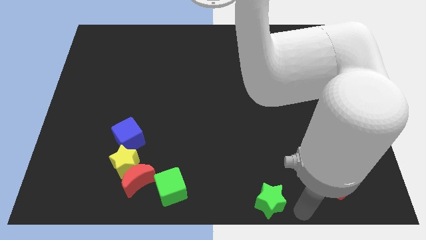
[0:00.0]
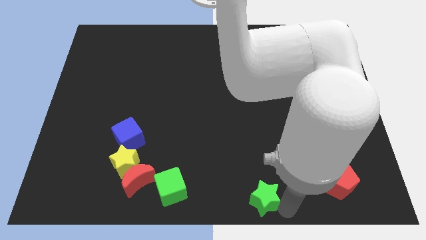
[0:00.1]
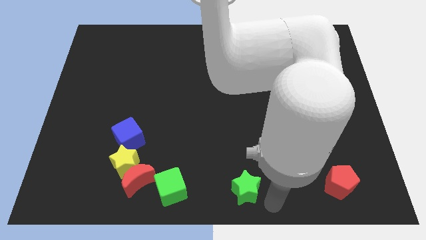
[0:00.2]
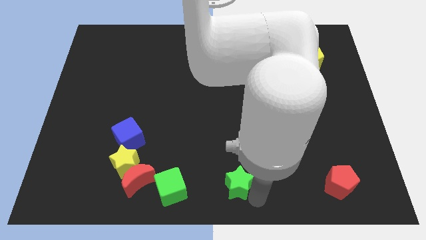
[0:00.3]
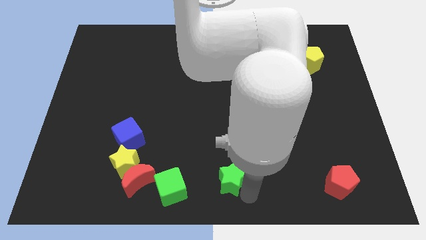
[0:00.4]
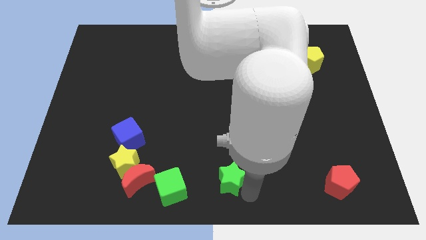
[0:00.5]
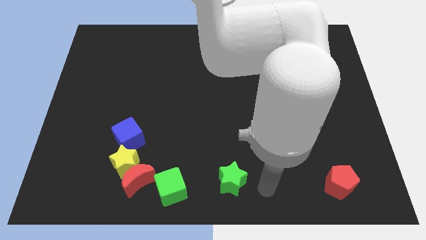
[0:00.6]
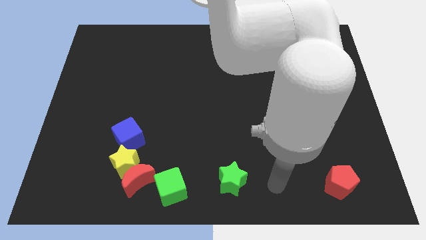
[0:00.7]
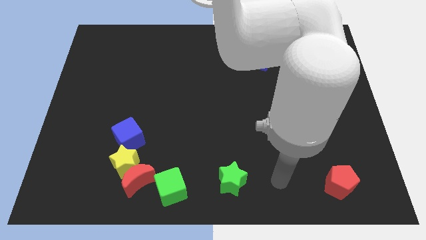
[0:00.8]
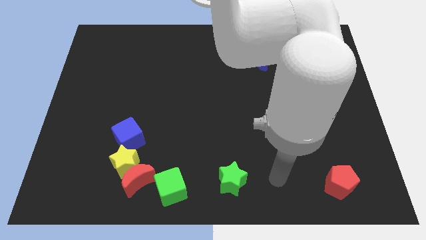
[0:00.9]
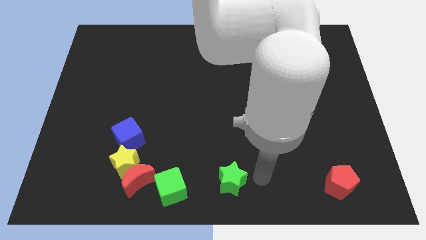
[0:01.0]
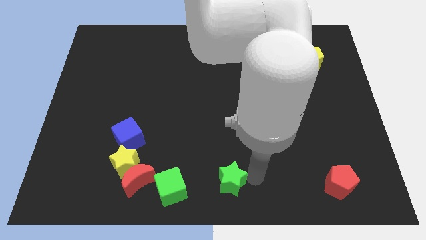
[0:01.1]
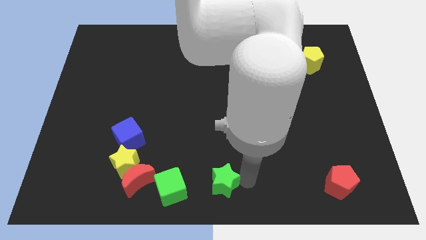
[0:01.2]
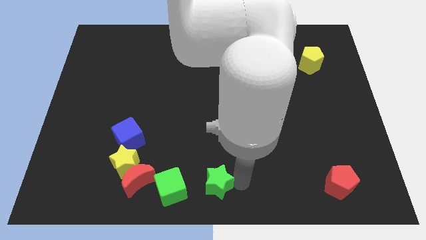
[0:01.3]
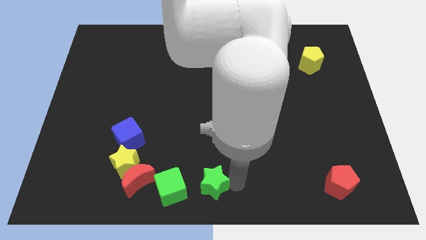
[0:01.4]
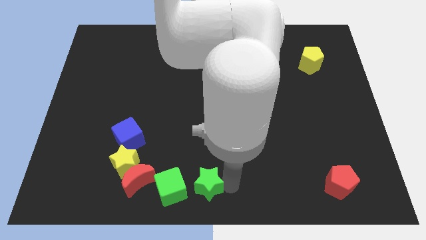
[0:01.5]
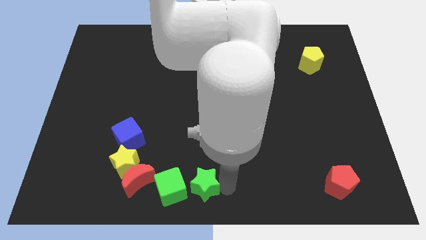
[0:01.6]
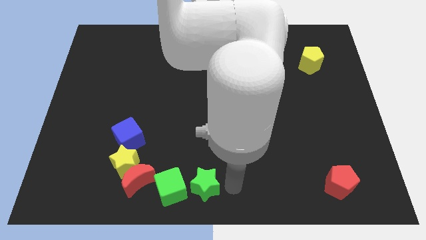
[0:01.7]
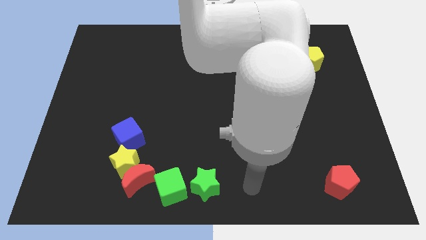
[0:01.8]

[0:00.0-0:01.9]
move the green star to the right side of the green cube

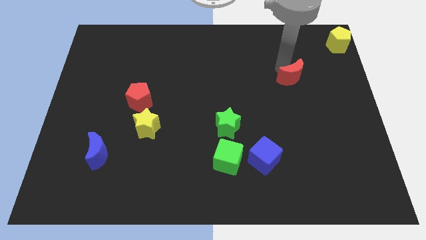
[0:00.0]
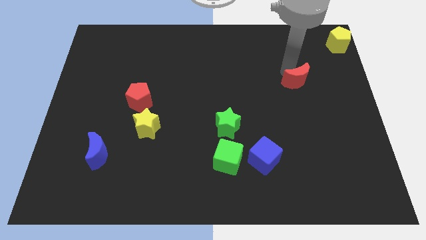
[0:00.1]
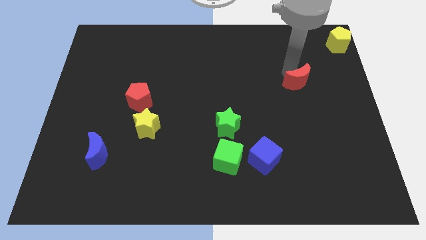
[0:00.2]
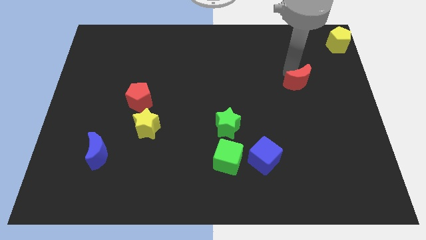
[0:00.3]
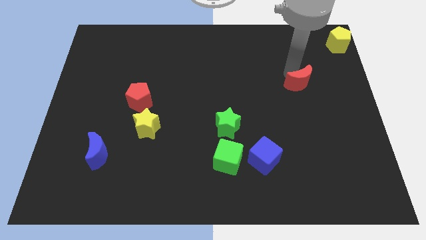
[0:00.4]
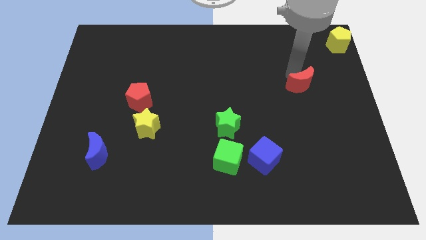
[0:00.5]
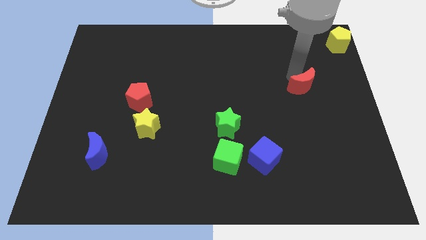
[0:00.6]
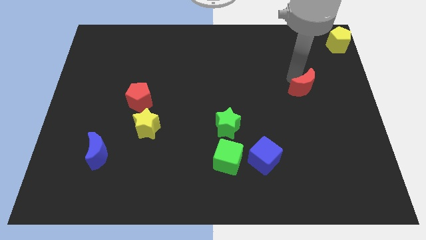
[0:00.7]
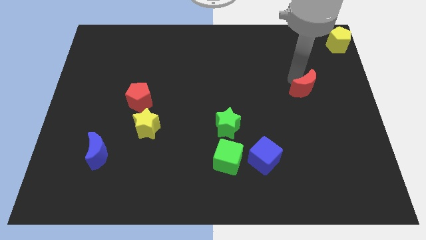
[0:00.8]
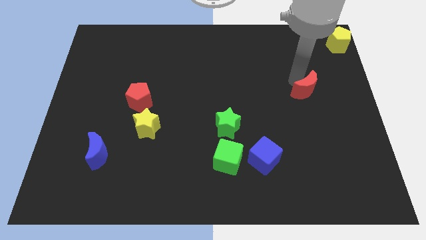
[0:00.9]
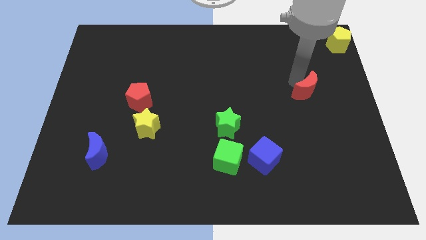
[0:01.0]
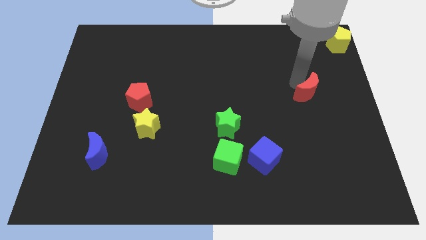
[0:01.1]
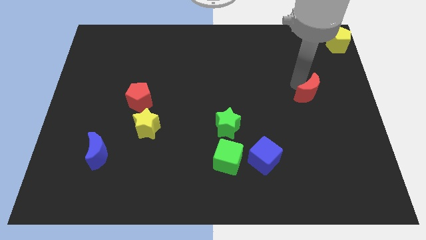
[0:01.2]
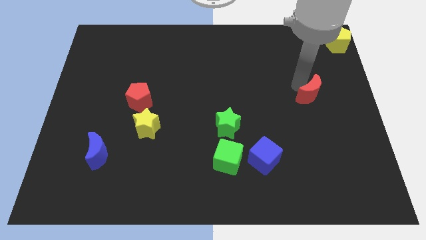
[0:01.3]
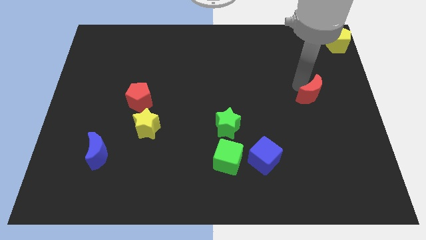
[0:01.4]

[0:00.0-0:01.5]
place the red crescent in between yellow pentagon and blue cube

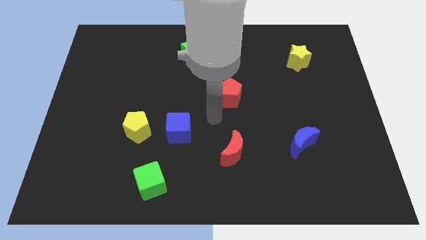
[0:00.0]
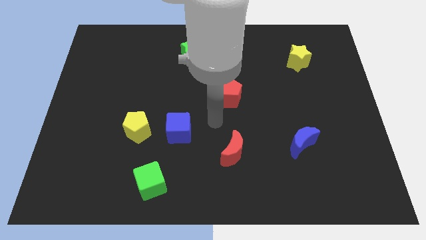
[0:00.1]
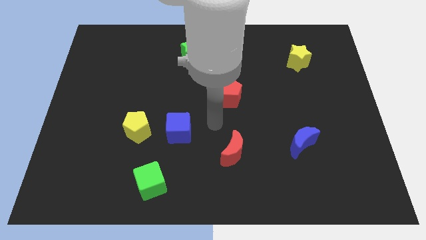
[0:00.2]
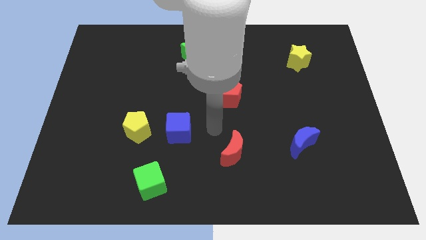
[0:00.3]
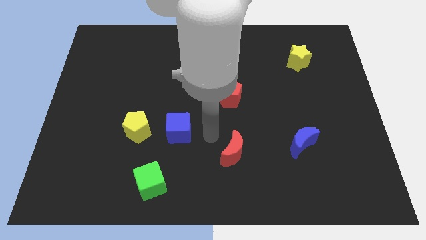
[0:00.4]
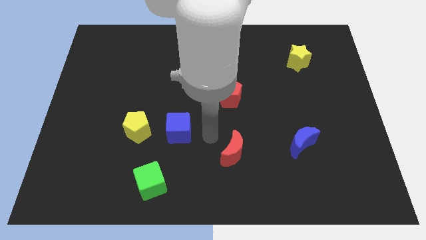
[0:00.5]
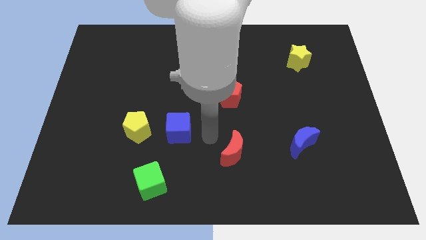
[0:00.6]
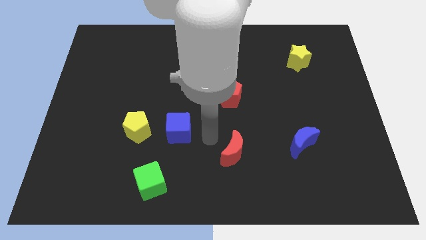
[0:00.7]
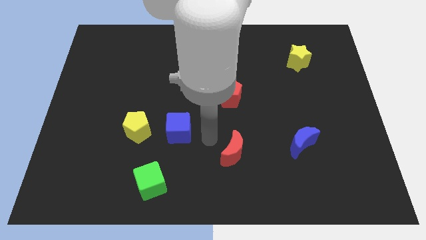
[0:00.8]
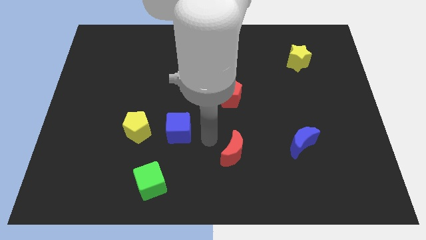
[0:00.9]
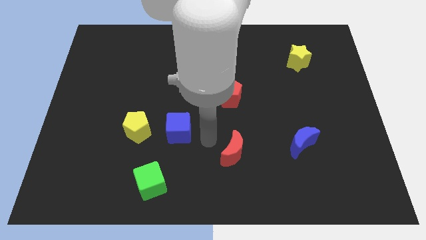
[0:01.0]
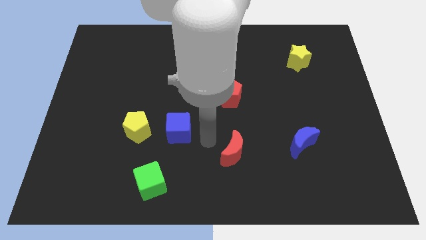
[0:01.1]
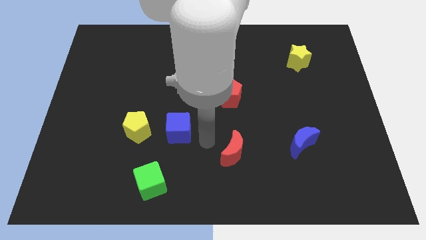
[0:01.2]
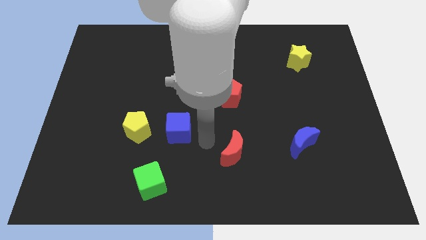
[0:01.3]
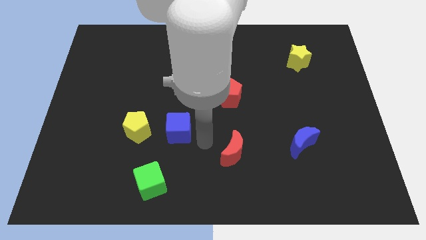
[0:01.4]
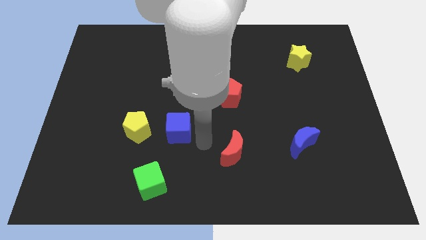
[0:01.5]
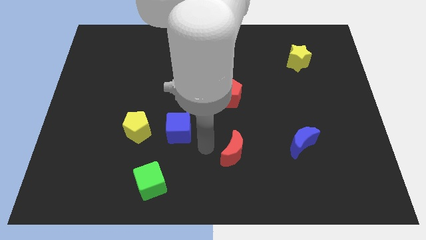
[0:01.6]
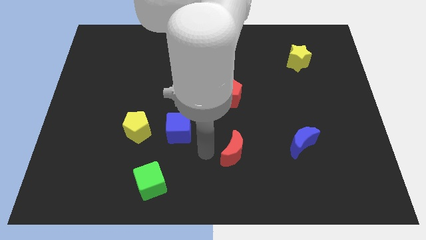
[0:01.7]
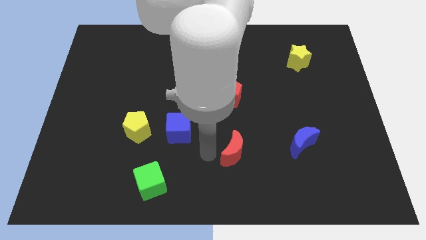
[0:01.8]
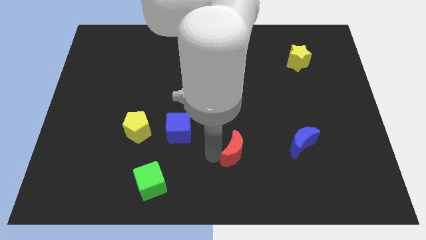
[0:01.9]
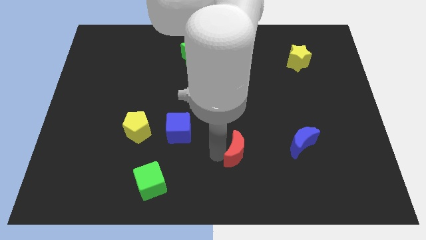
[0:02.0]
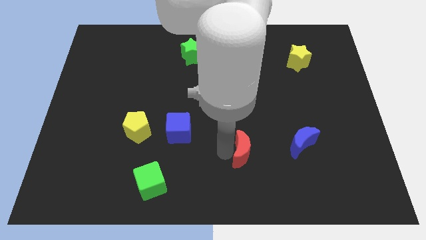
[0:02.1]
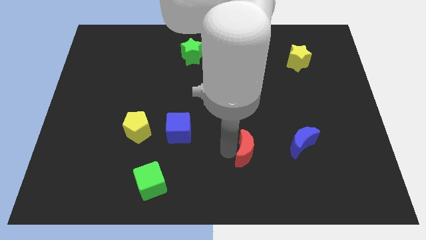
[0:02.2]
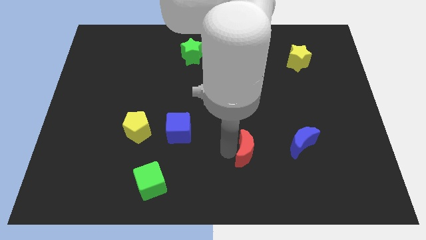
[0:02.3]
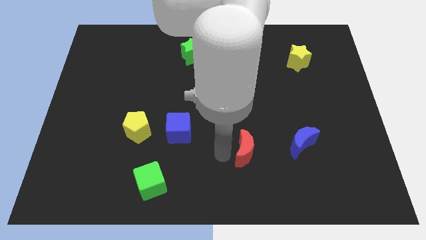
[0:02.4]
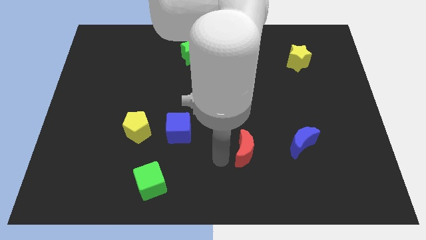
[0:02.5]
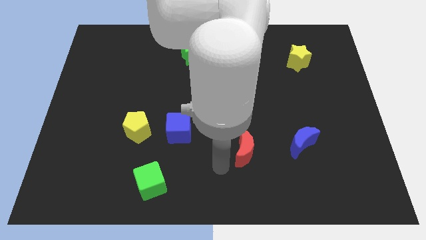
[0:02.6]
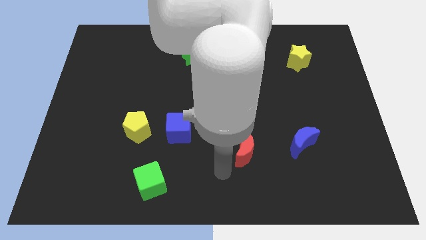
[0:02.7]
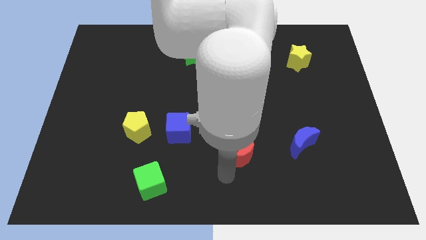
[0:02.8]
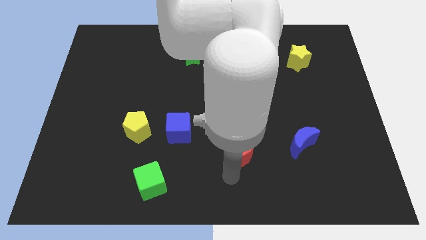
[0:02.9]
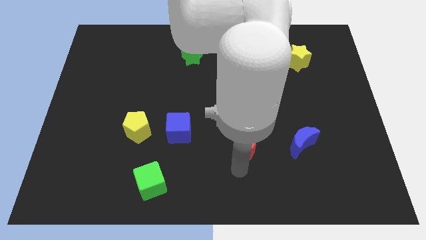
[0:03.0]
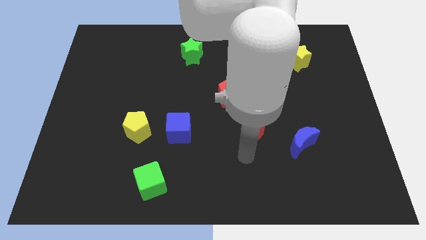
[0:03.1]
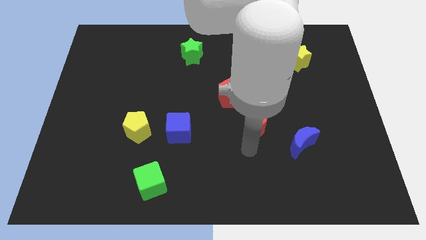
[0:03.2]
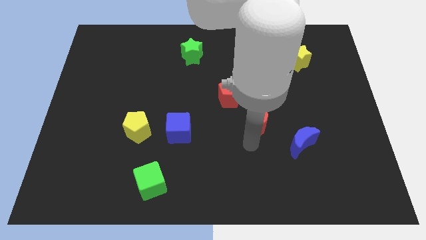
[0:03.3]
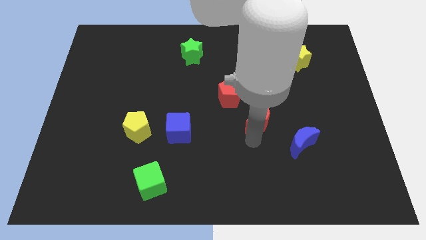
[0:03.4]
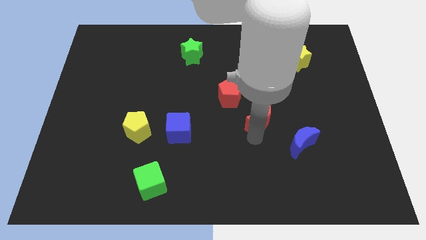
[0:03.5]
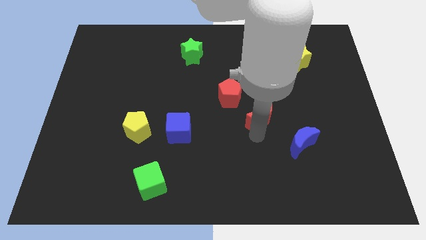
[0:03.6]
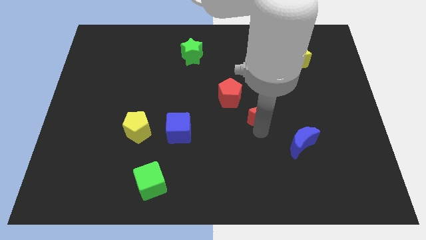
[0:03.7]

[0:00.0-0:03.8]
place the red crescent in between the red pentagon and the blue moon

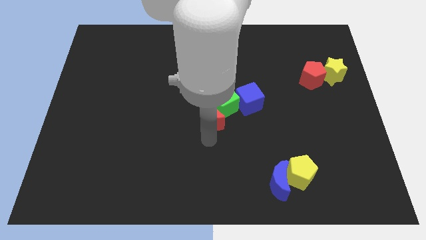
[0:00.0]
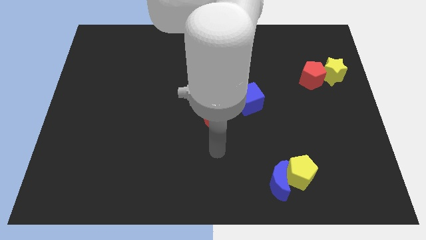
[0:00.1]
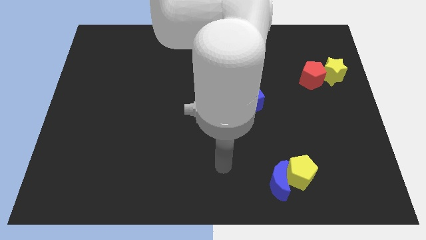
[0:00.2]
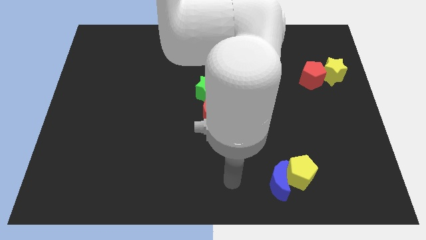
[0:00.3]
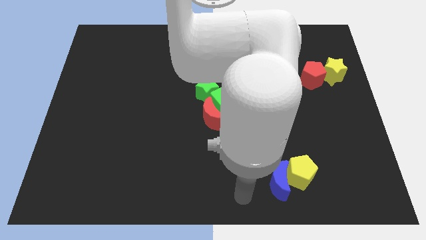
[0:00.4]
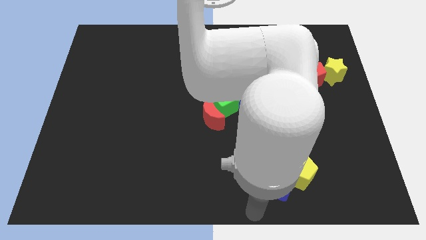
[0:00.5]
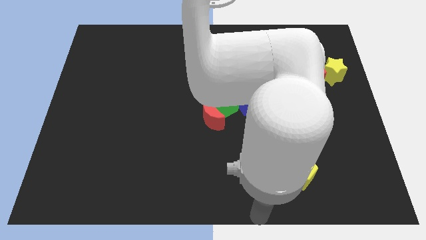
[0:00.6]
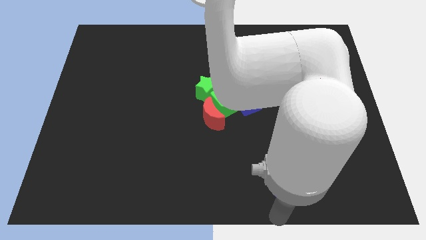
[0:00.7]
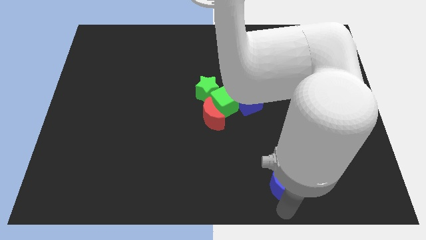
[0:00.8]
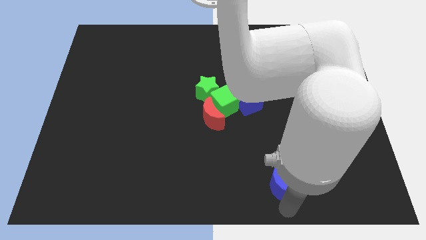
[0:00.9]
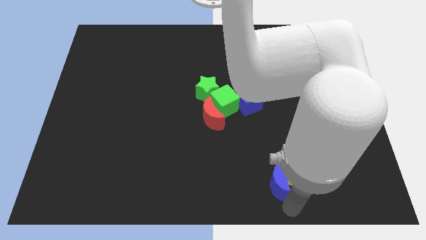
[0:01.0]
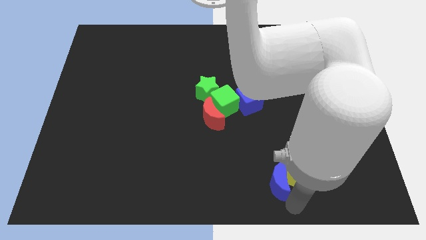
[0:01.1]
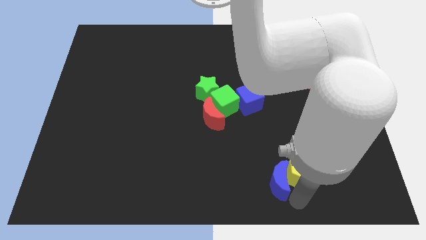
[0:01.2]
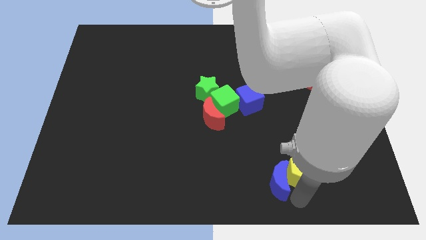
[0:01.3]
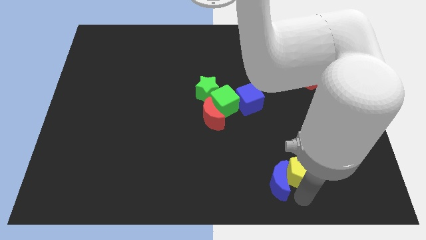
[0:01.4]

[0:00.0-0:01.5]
move your arm to the bottom of the yellow pentagon

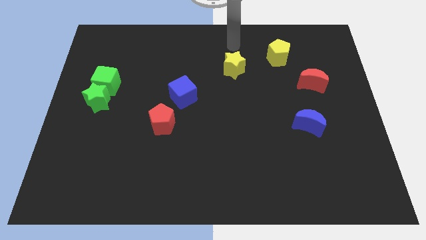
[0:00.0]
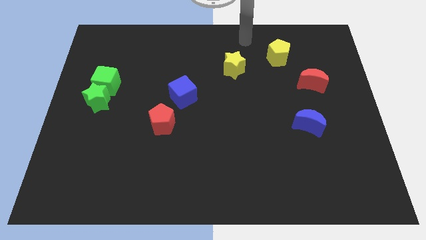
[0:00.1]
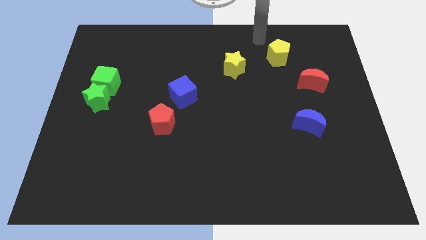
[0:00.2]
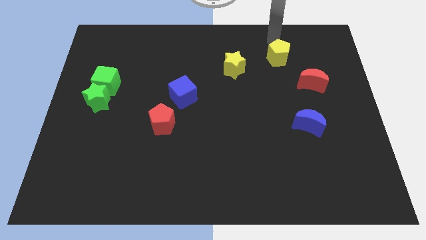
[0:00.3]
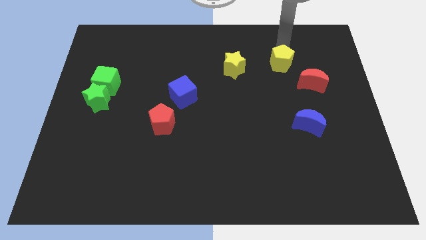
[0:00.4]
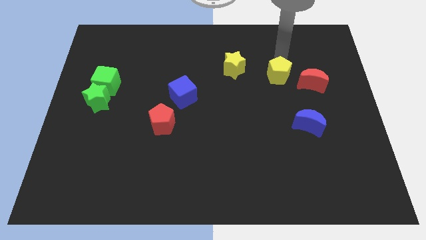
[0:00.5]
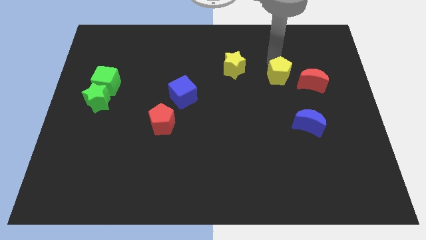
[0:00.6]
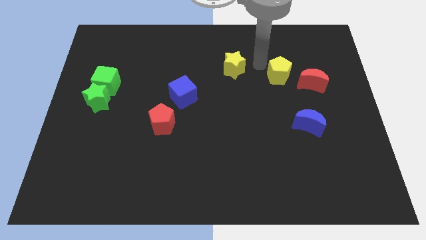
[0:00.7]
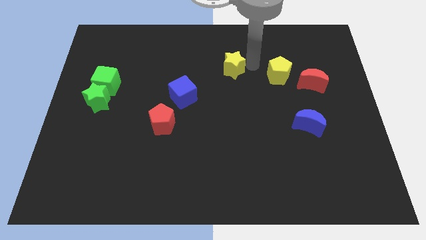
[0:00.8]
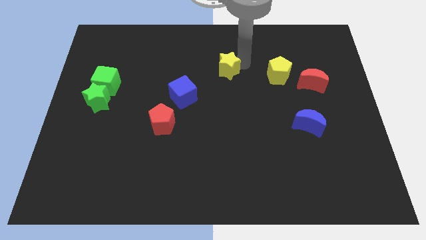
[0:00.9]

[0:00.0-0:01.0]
push the yellow pentagon parallel to the left of the red moon
